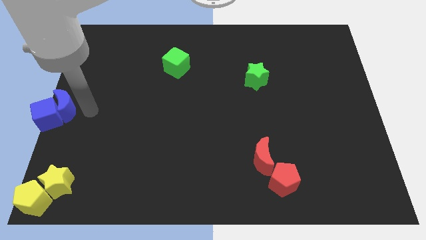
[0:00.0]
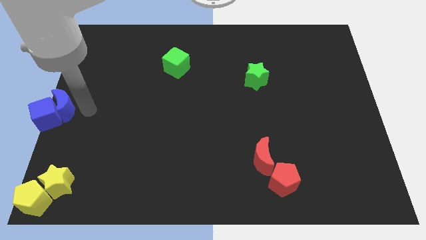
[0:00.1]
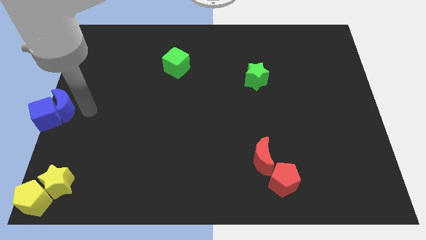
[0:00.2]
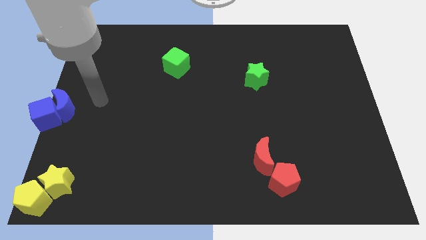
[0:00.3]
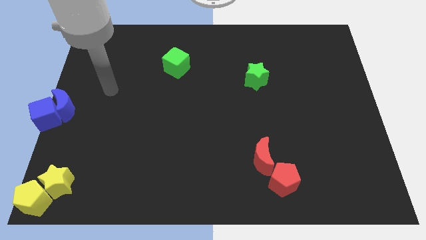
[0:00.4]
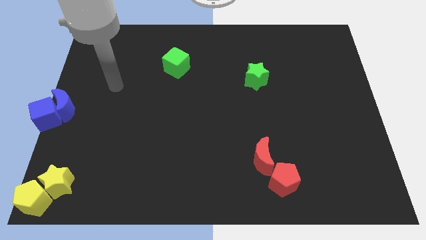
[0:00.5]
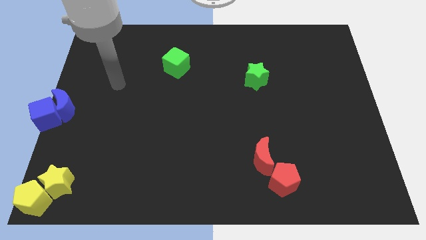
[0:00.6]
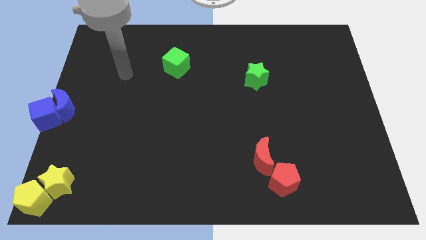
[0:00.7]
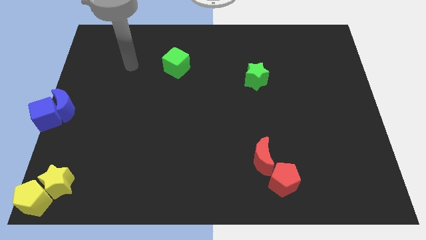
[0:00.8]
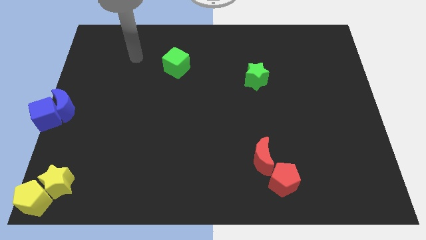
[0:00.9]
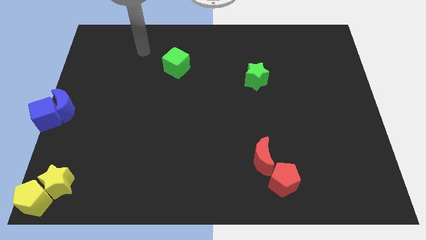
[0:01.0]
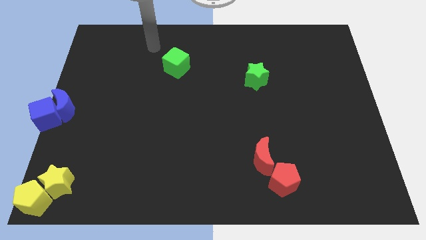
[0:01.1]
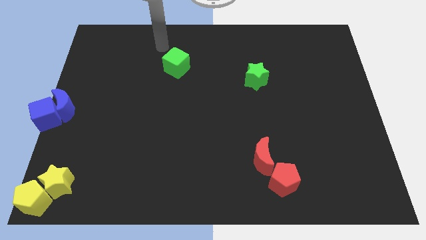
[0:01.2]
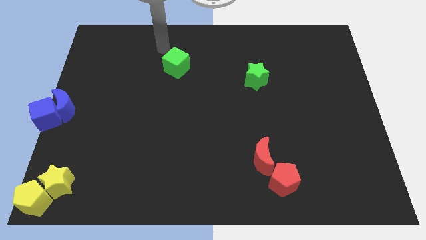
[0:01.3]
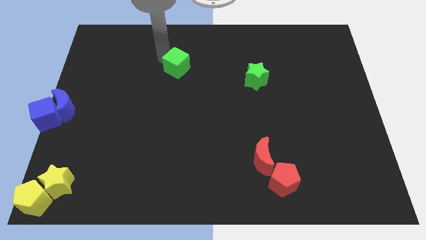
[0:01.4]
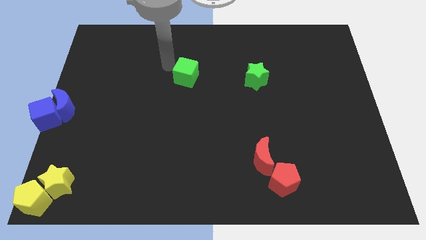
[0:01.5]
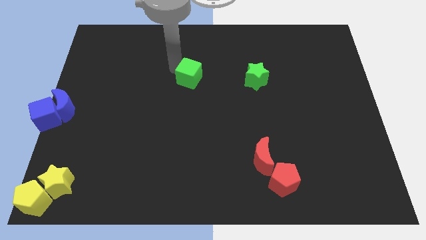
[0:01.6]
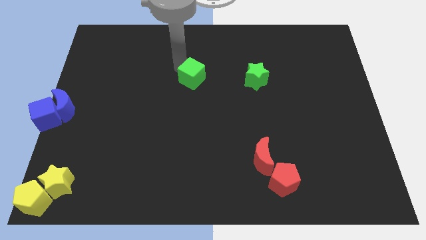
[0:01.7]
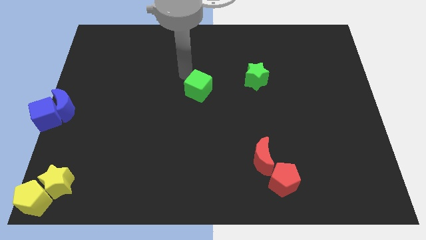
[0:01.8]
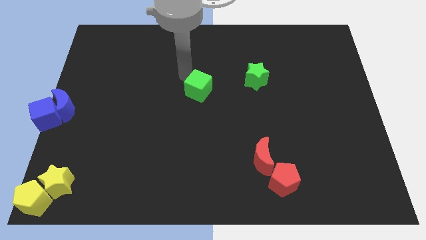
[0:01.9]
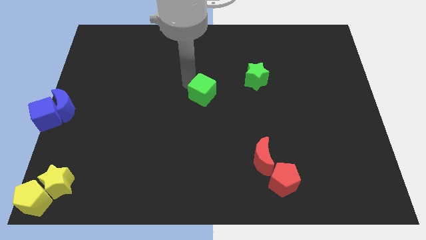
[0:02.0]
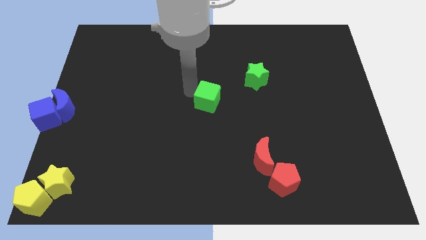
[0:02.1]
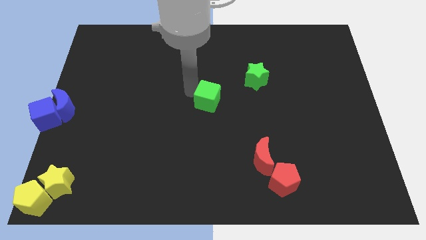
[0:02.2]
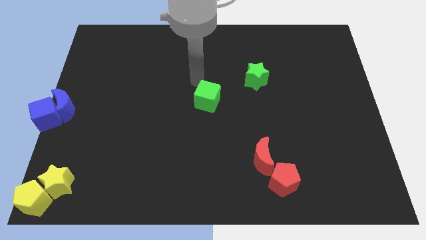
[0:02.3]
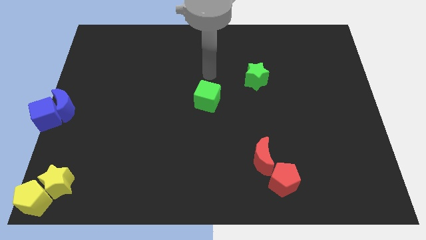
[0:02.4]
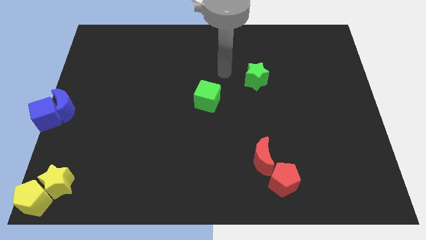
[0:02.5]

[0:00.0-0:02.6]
move the green cube to the center of the board

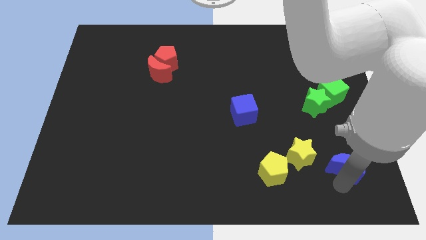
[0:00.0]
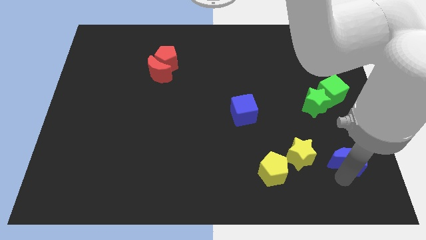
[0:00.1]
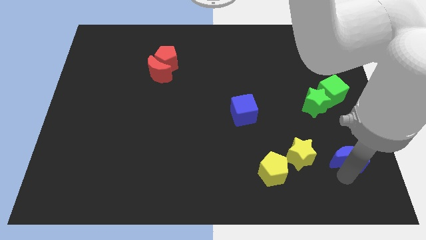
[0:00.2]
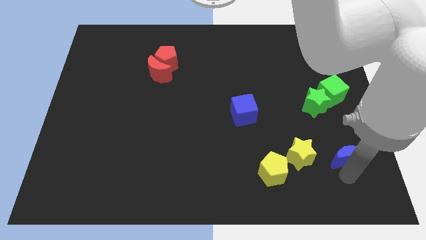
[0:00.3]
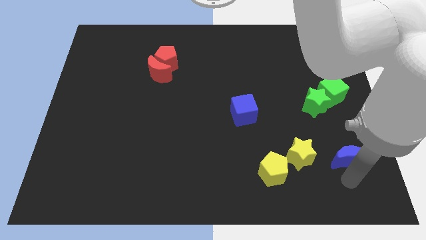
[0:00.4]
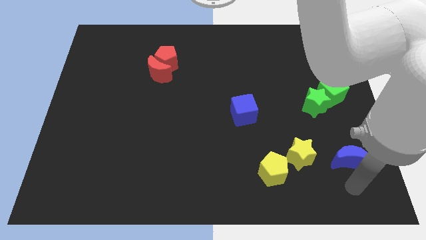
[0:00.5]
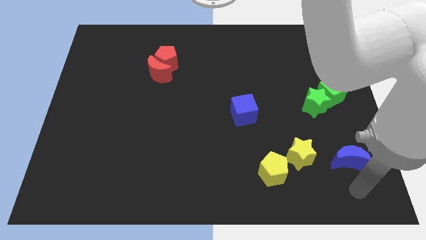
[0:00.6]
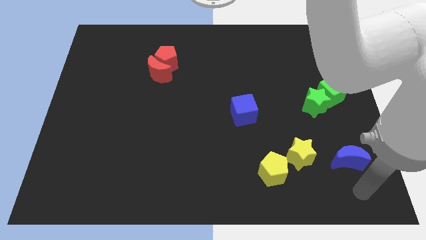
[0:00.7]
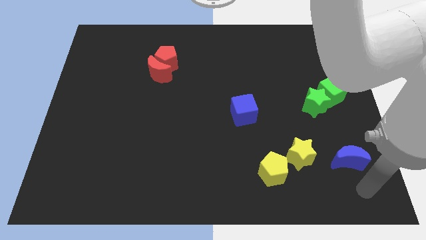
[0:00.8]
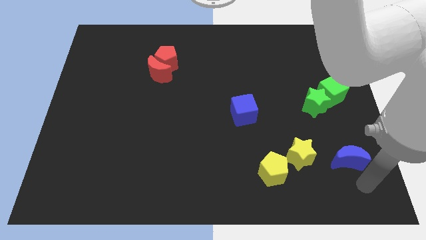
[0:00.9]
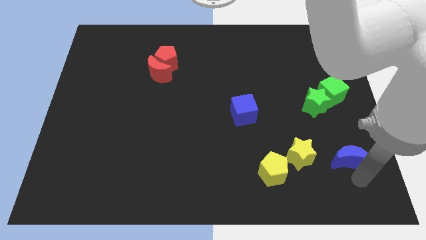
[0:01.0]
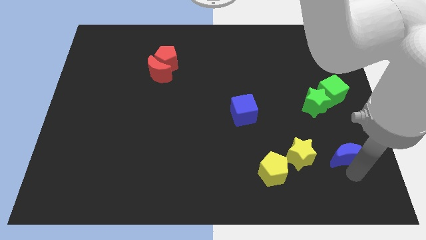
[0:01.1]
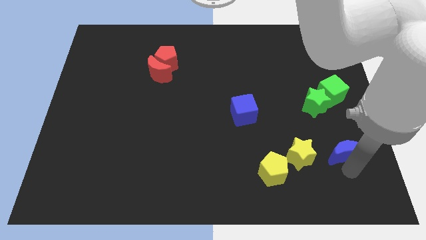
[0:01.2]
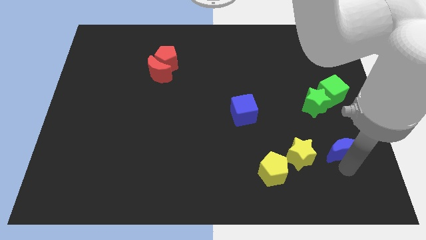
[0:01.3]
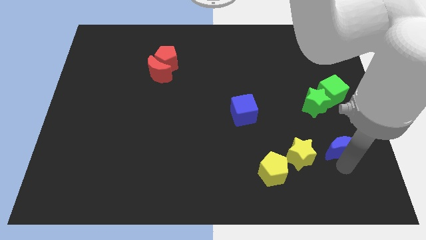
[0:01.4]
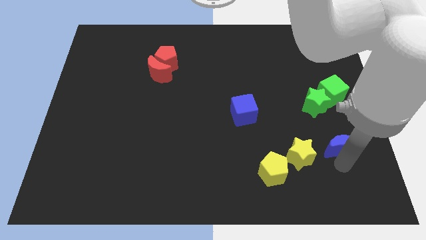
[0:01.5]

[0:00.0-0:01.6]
move the blue moon parallel right to the yellow star

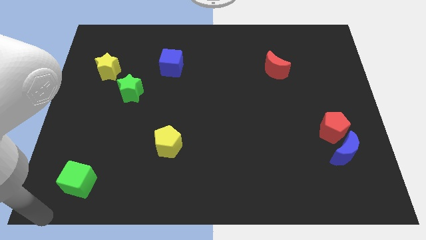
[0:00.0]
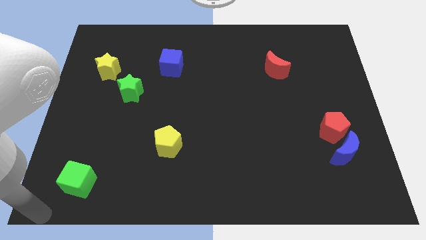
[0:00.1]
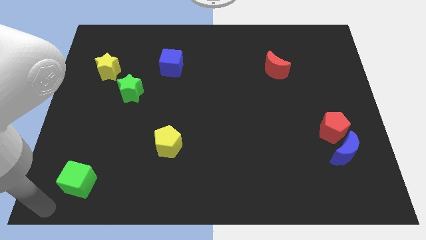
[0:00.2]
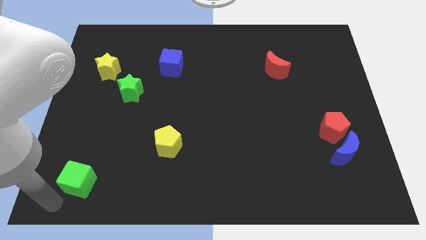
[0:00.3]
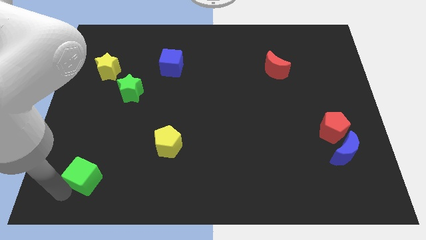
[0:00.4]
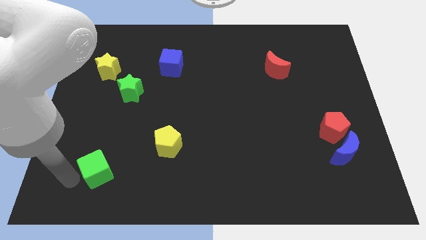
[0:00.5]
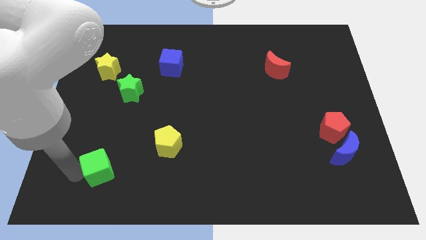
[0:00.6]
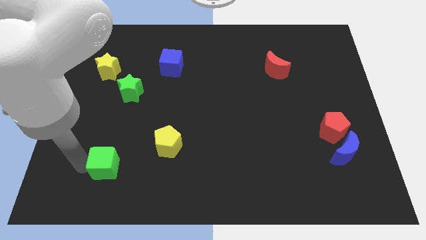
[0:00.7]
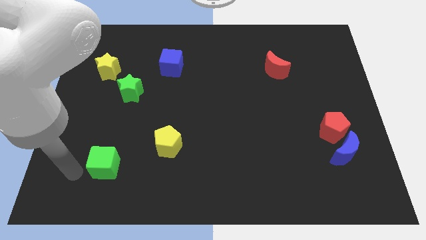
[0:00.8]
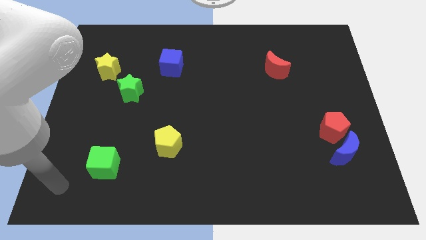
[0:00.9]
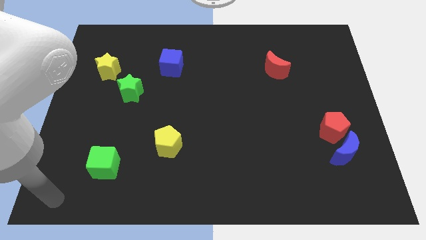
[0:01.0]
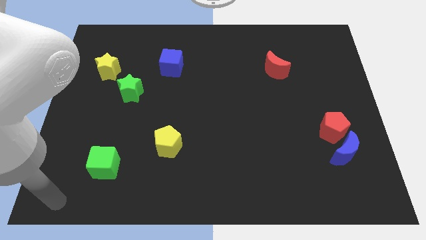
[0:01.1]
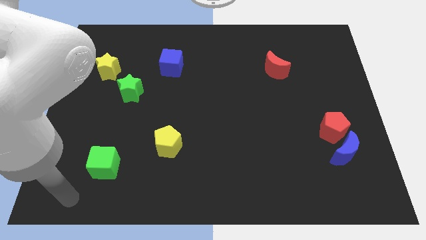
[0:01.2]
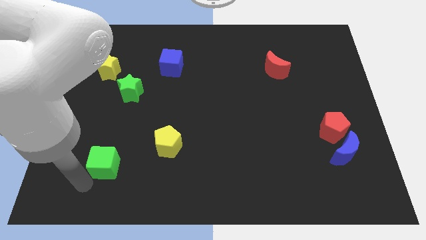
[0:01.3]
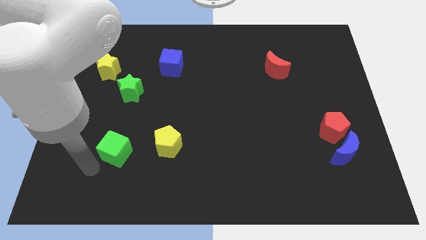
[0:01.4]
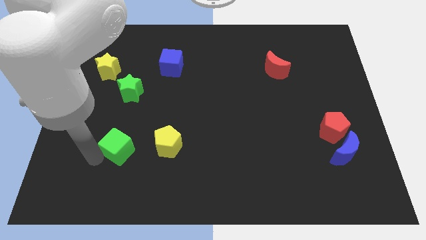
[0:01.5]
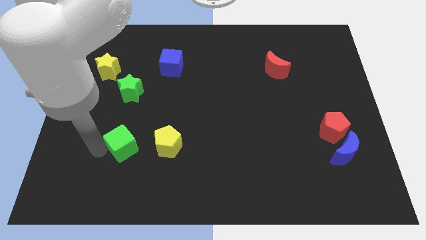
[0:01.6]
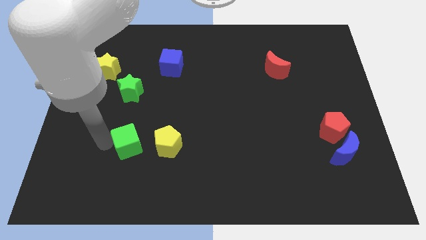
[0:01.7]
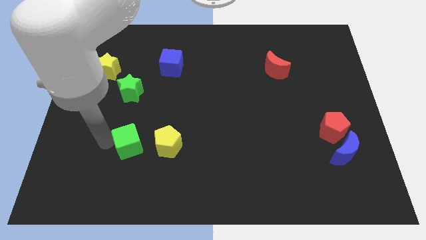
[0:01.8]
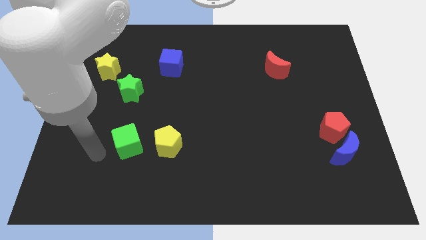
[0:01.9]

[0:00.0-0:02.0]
slide the green cube towards the left side of the yellow pentagon

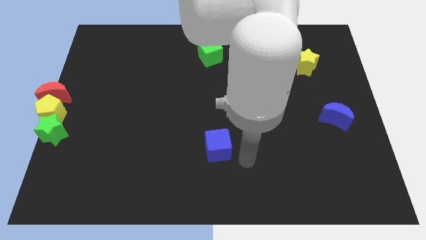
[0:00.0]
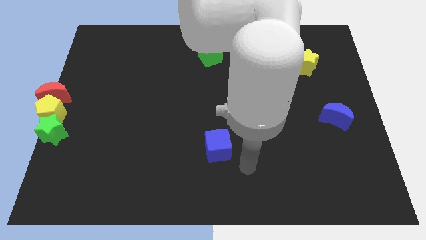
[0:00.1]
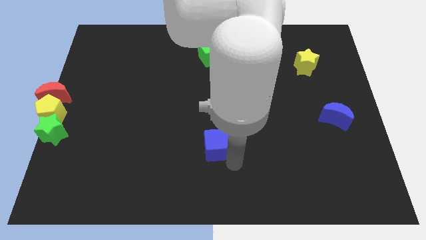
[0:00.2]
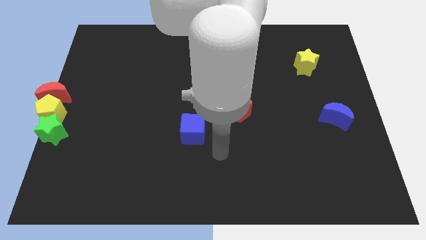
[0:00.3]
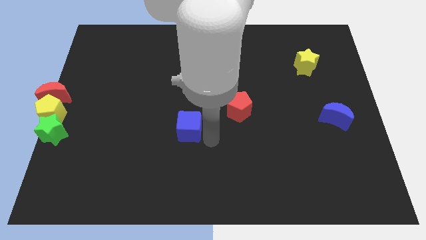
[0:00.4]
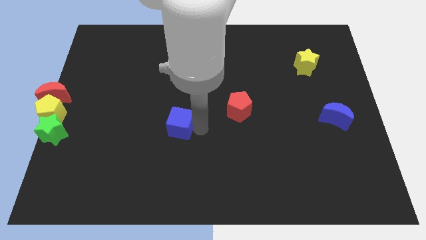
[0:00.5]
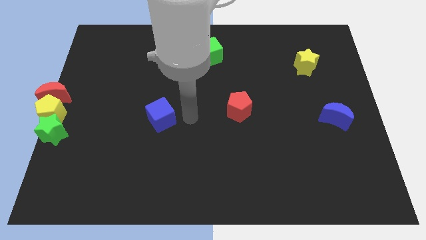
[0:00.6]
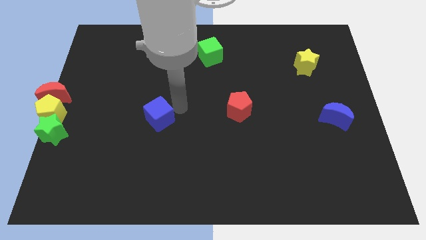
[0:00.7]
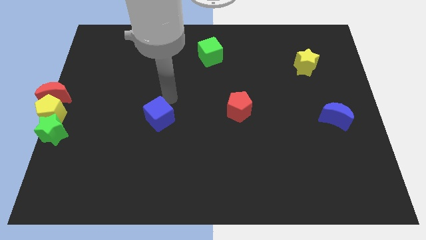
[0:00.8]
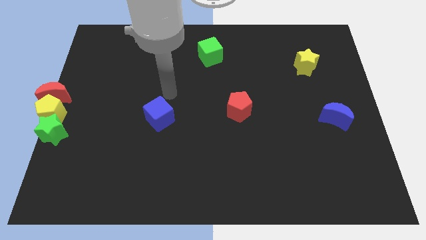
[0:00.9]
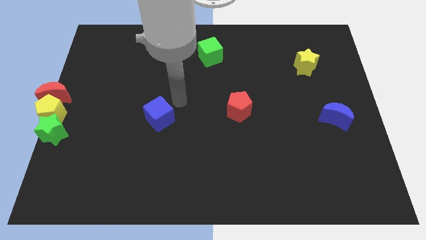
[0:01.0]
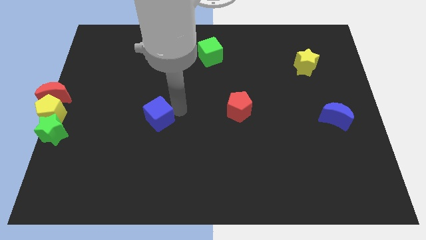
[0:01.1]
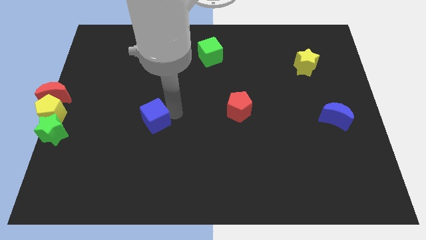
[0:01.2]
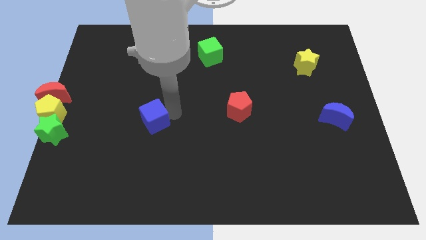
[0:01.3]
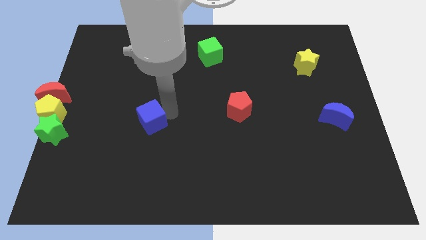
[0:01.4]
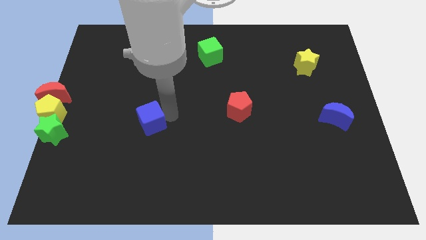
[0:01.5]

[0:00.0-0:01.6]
move the blue cube to the center of the board

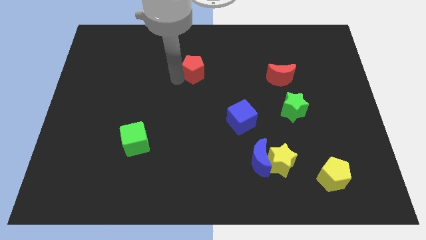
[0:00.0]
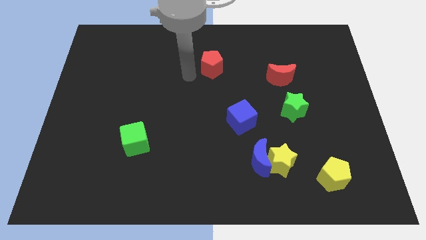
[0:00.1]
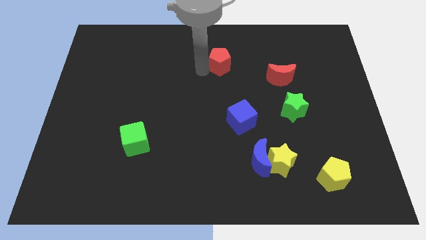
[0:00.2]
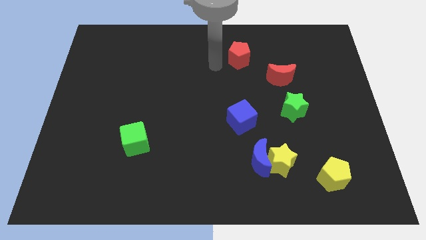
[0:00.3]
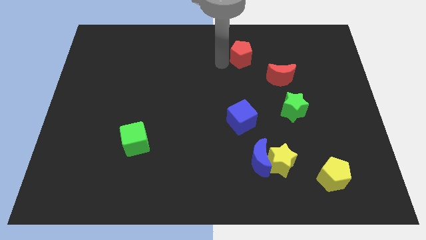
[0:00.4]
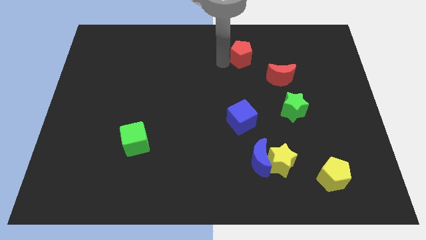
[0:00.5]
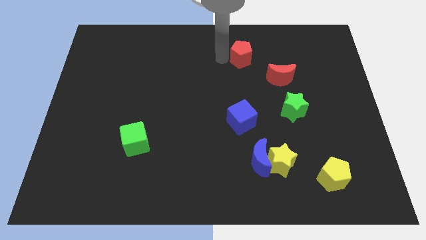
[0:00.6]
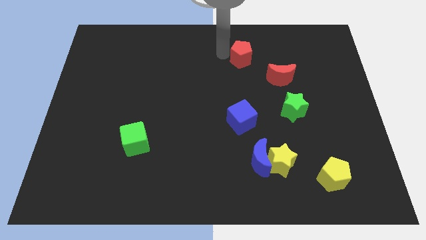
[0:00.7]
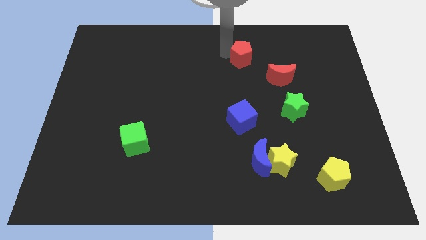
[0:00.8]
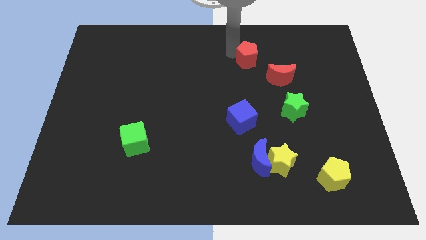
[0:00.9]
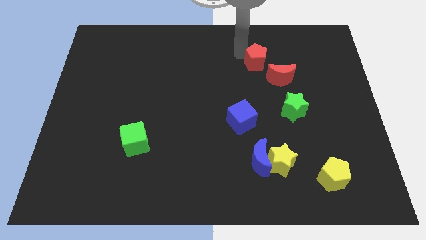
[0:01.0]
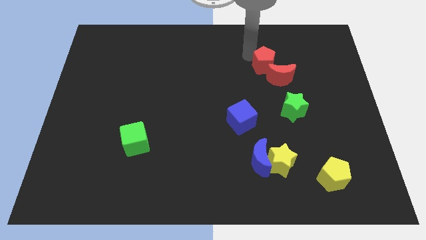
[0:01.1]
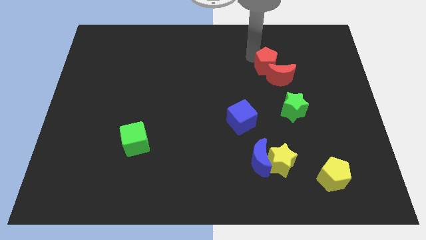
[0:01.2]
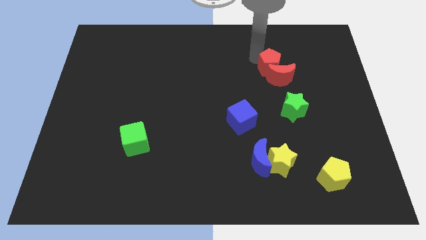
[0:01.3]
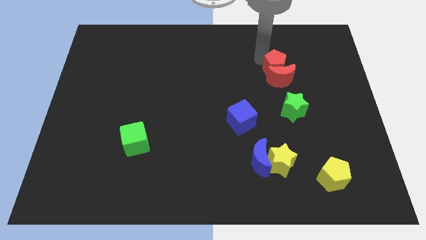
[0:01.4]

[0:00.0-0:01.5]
put the red blocks together
